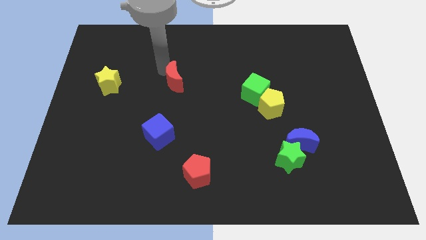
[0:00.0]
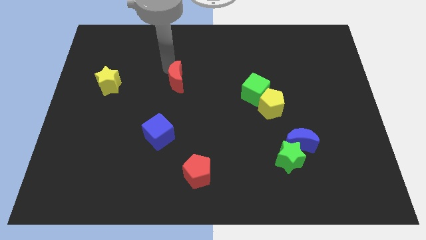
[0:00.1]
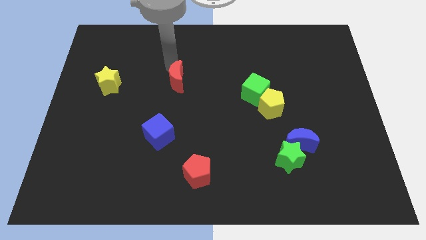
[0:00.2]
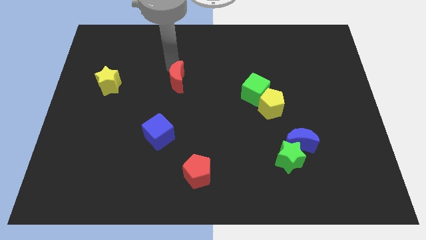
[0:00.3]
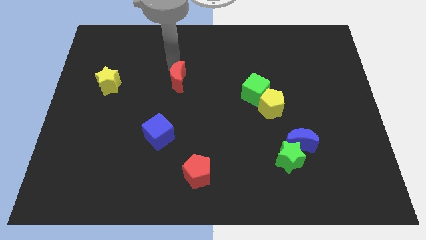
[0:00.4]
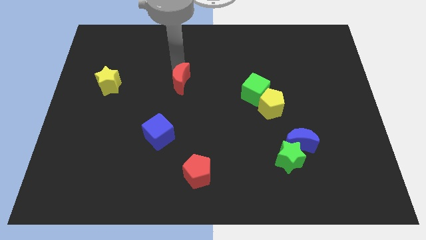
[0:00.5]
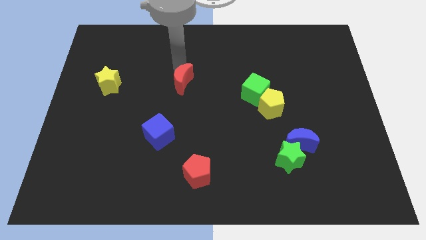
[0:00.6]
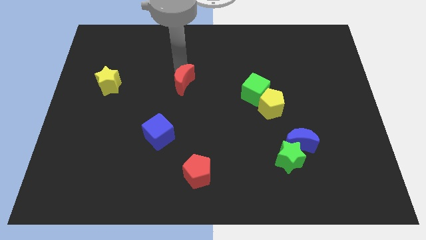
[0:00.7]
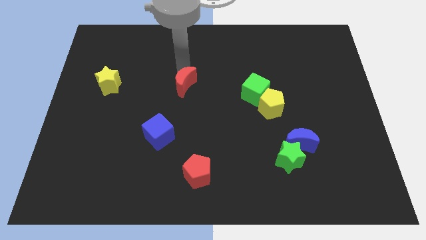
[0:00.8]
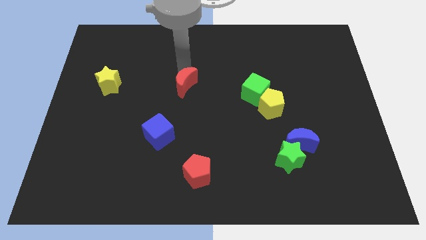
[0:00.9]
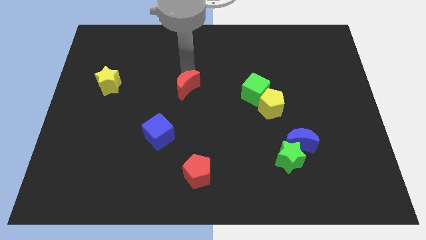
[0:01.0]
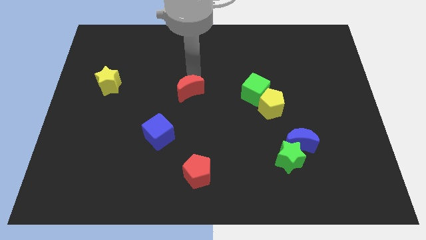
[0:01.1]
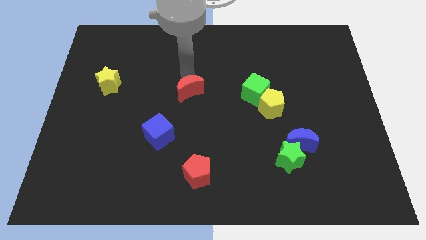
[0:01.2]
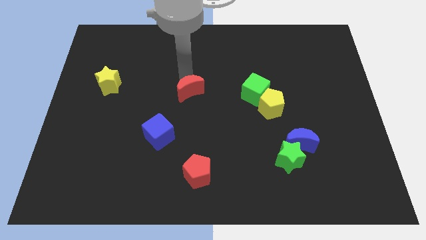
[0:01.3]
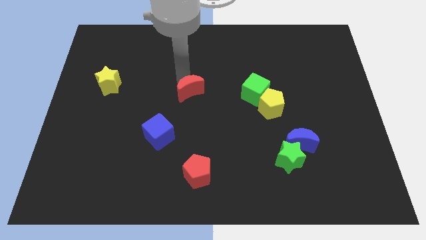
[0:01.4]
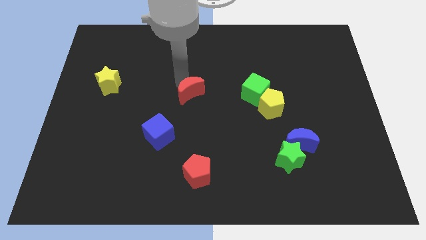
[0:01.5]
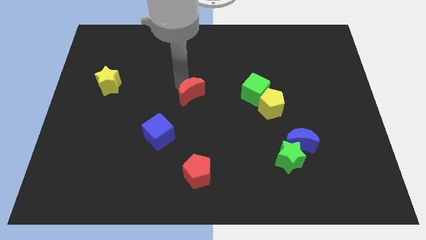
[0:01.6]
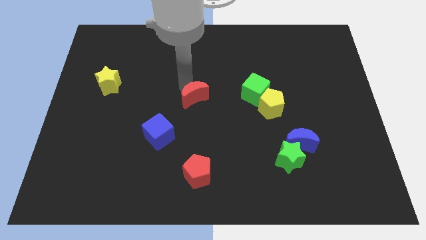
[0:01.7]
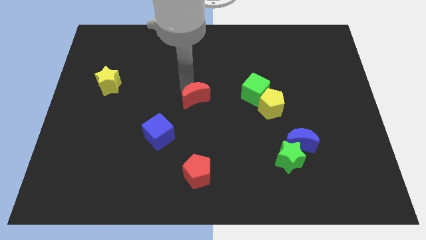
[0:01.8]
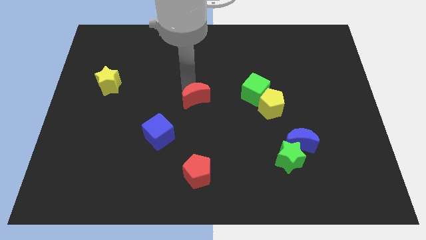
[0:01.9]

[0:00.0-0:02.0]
push the red crescent to the left of the green cube

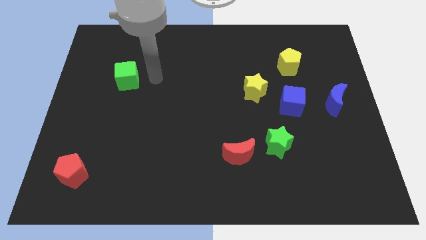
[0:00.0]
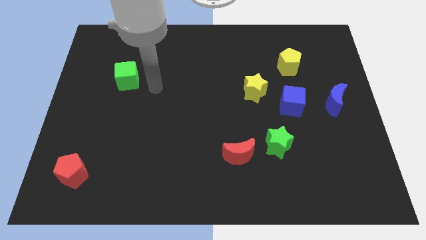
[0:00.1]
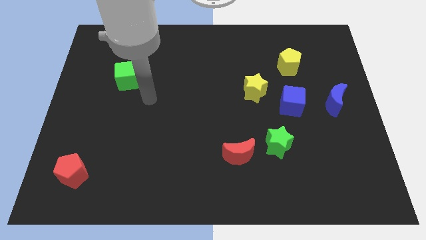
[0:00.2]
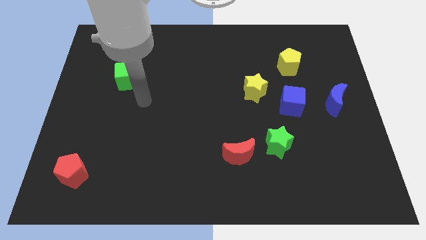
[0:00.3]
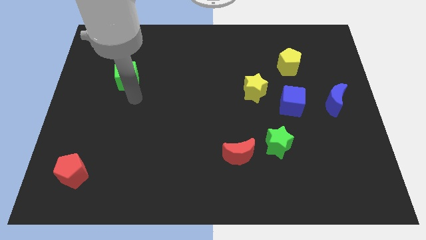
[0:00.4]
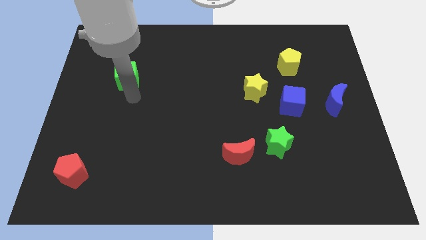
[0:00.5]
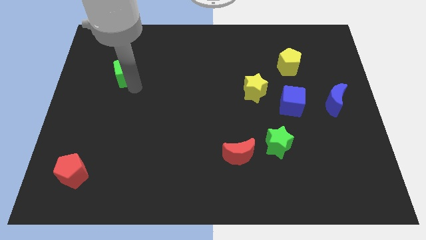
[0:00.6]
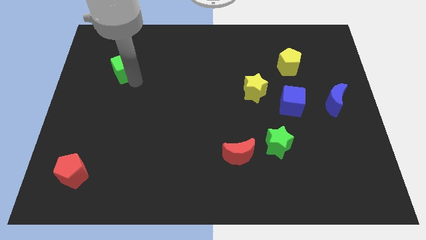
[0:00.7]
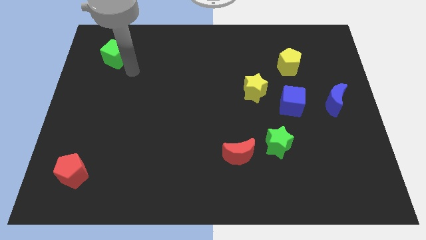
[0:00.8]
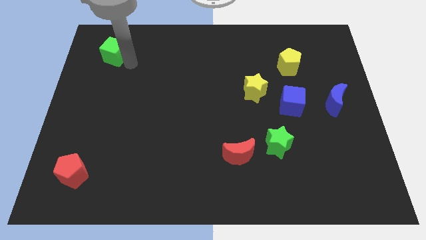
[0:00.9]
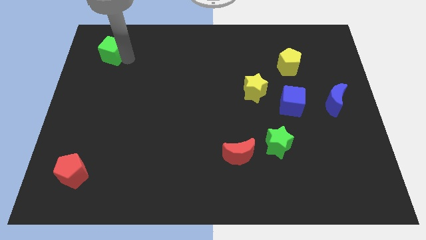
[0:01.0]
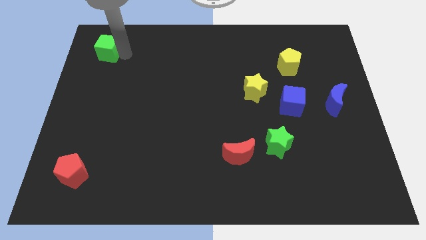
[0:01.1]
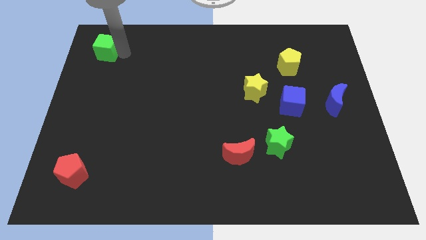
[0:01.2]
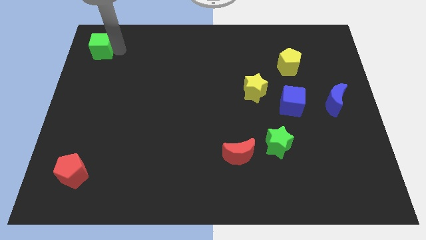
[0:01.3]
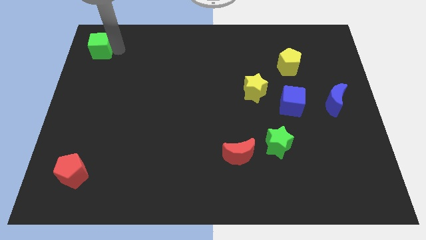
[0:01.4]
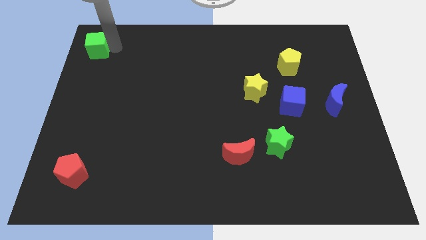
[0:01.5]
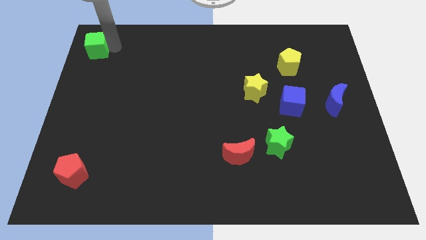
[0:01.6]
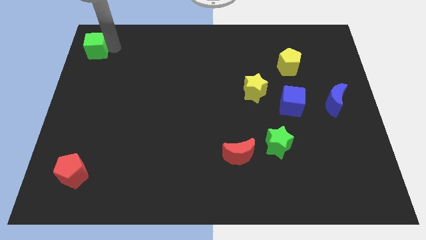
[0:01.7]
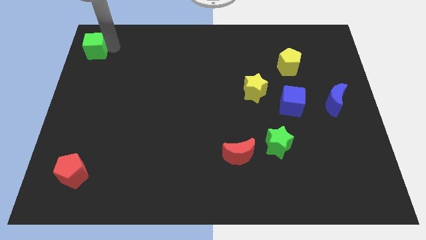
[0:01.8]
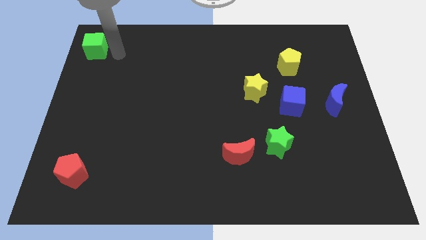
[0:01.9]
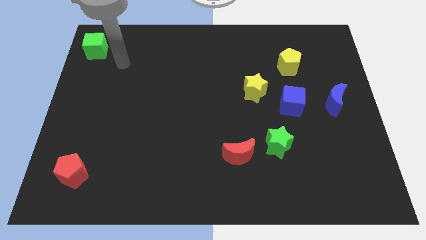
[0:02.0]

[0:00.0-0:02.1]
push green cube to the top left

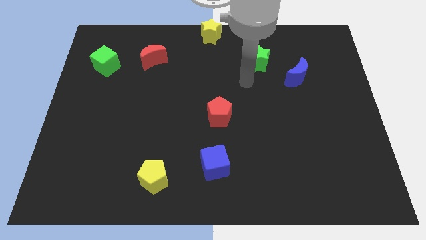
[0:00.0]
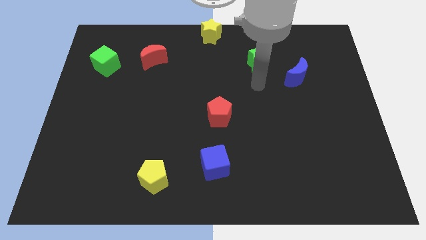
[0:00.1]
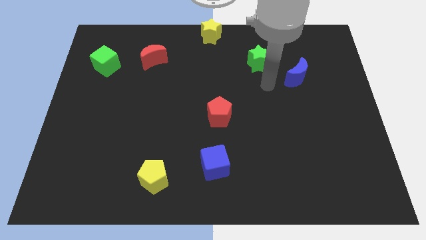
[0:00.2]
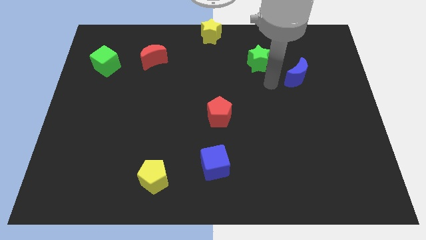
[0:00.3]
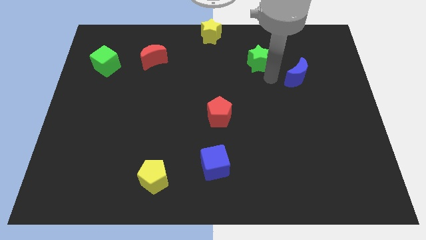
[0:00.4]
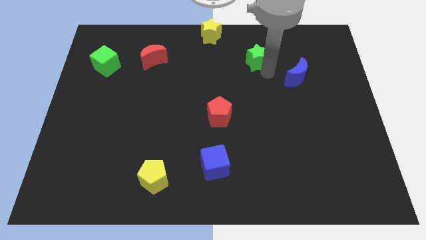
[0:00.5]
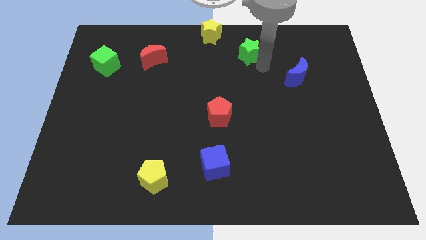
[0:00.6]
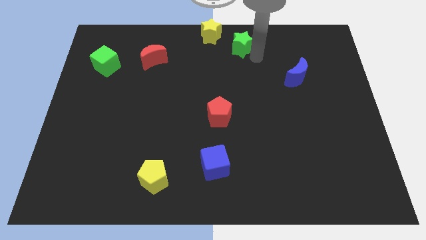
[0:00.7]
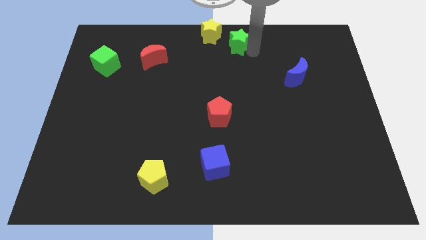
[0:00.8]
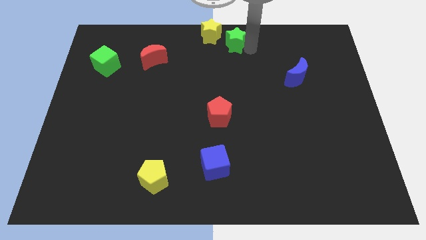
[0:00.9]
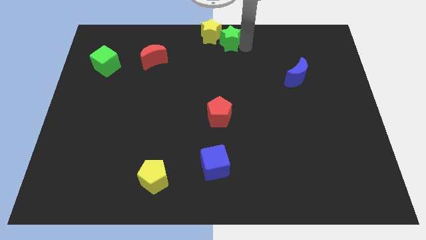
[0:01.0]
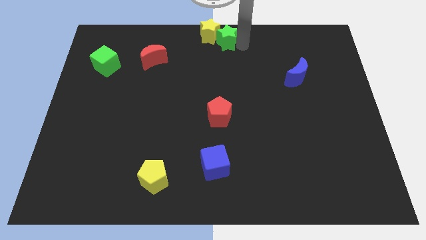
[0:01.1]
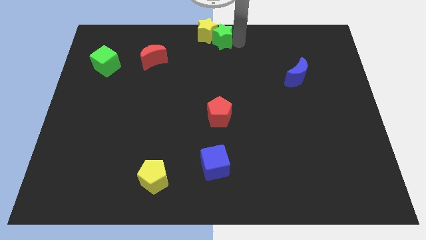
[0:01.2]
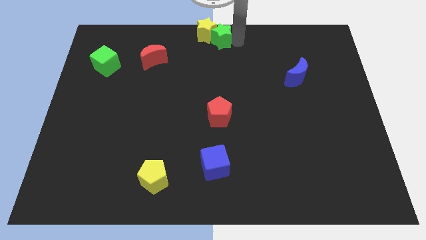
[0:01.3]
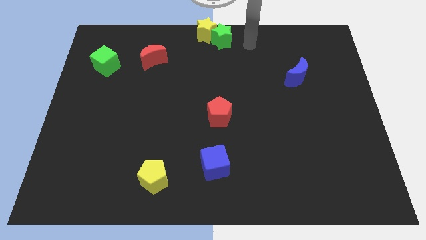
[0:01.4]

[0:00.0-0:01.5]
push the green star into the yellow star top center of the board

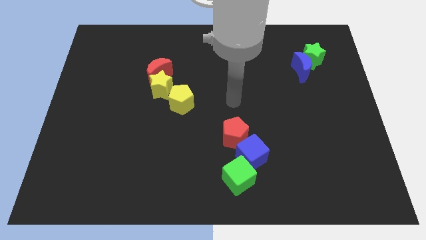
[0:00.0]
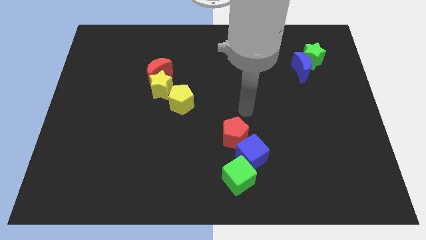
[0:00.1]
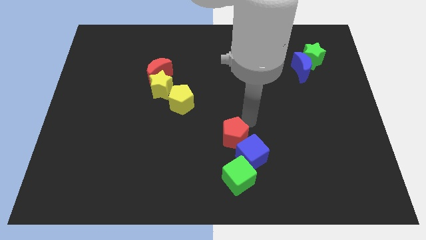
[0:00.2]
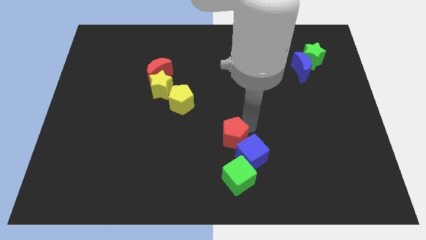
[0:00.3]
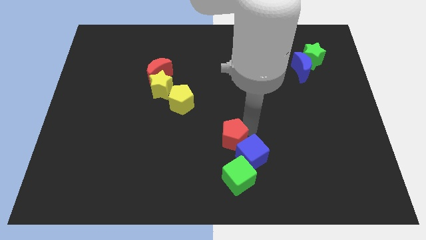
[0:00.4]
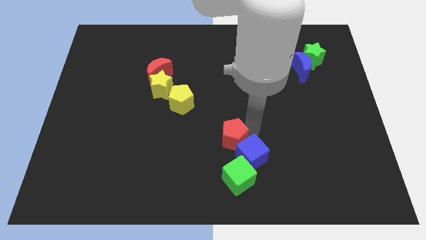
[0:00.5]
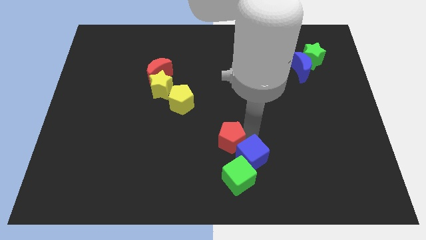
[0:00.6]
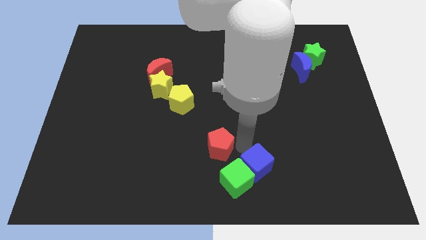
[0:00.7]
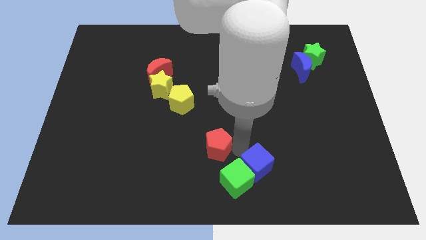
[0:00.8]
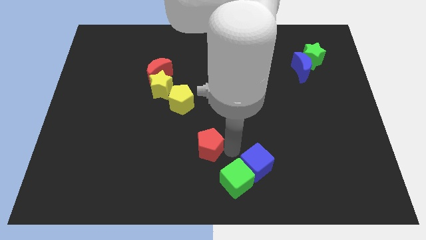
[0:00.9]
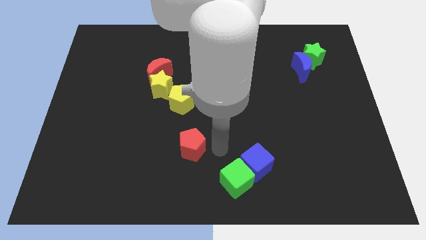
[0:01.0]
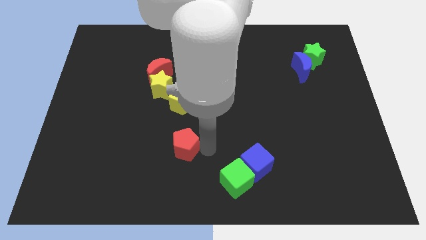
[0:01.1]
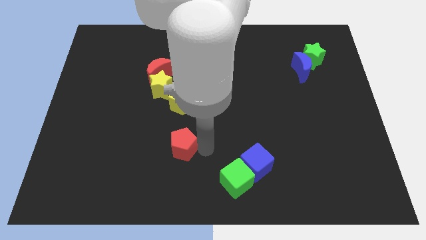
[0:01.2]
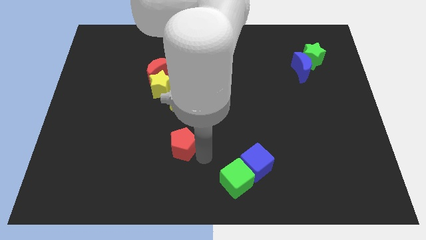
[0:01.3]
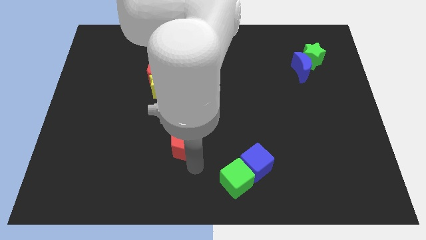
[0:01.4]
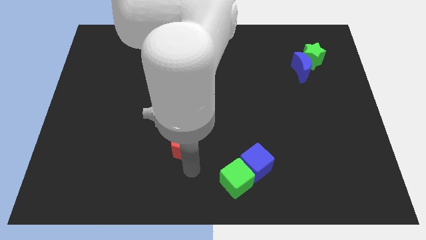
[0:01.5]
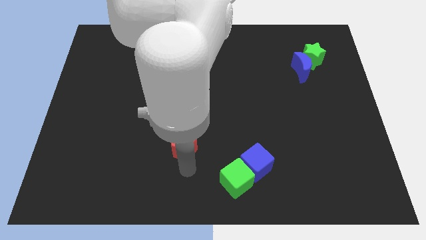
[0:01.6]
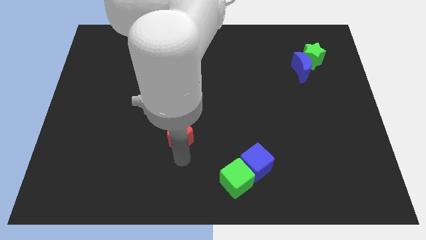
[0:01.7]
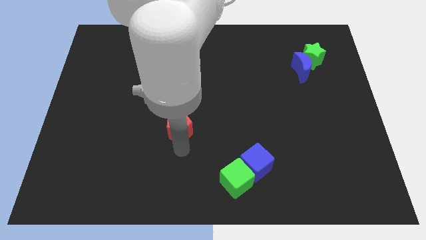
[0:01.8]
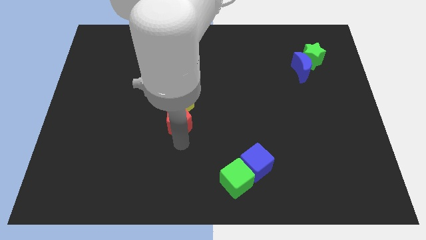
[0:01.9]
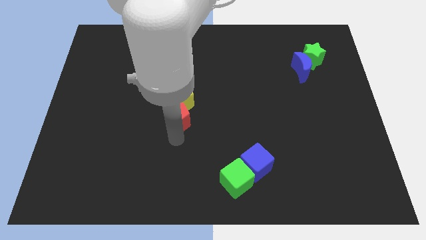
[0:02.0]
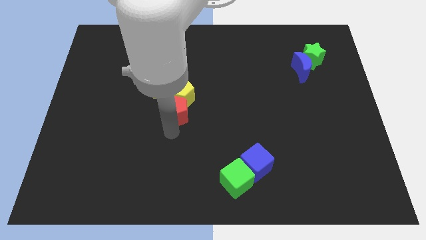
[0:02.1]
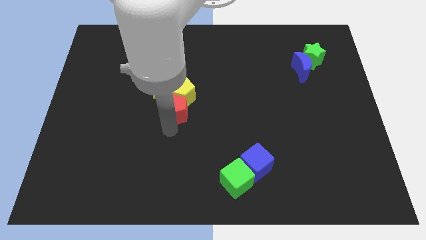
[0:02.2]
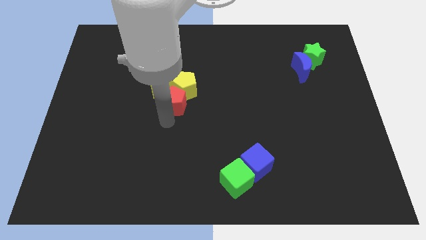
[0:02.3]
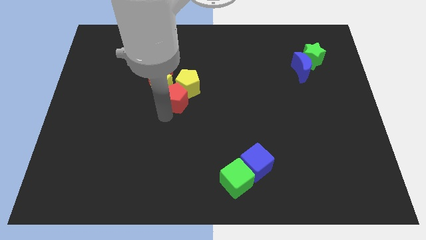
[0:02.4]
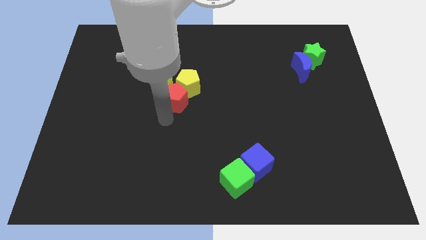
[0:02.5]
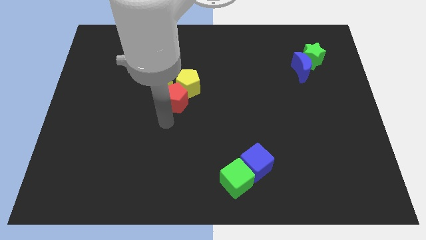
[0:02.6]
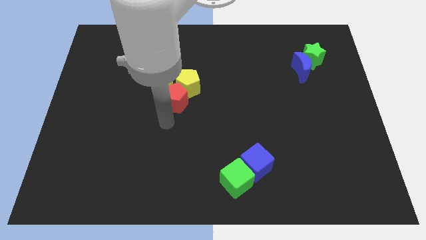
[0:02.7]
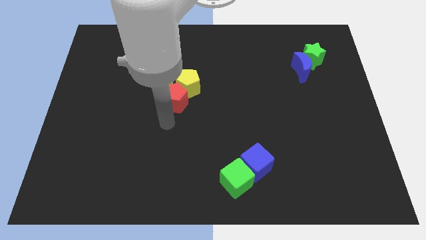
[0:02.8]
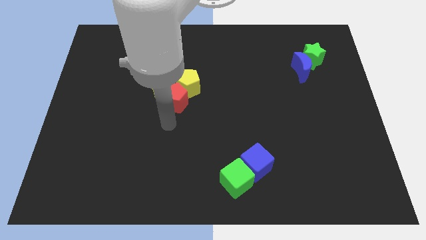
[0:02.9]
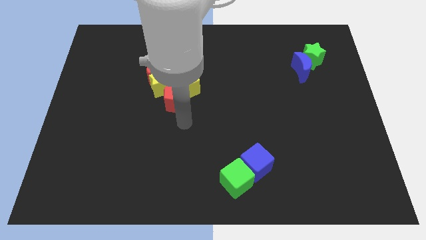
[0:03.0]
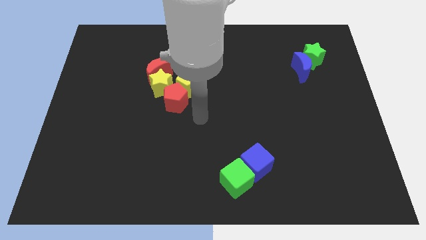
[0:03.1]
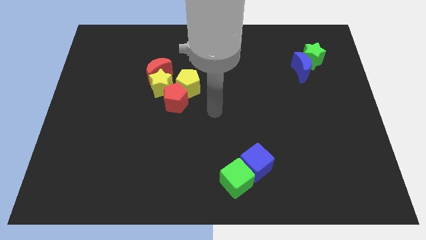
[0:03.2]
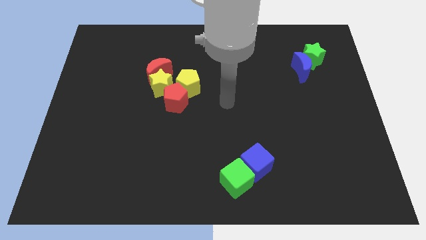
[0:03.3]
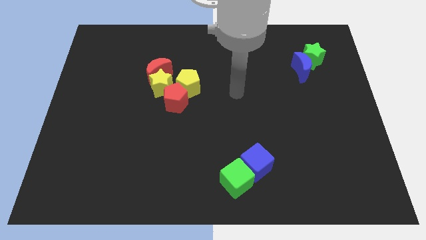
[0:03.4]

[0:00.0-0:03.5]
place the red pentagon at the bottom of the yellow penatgon and yellow star
